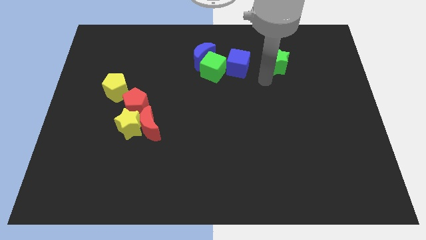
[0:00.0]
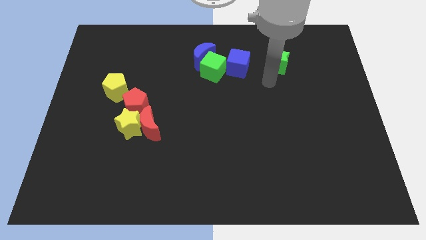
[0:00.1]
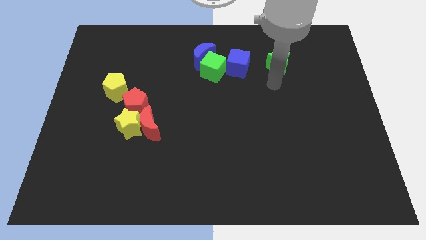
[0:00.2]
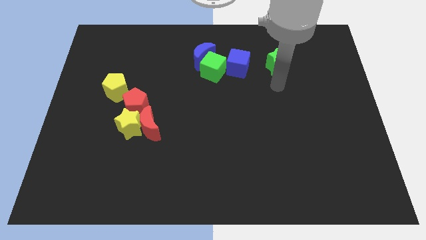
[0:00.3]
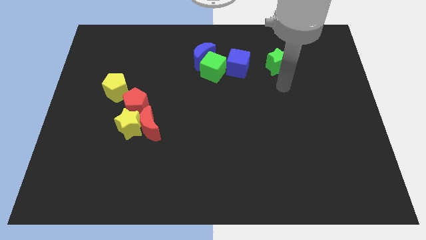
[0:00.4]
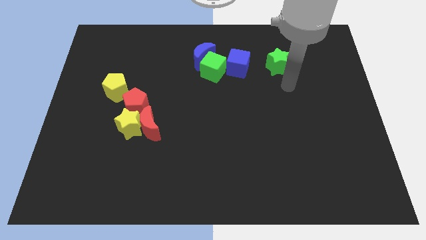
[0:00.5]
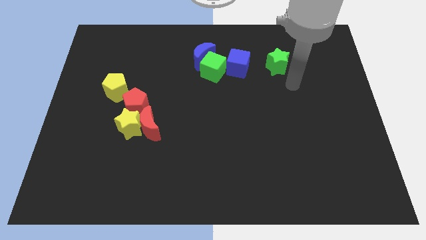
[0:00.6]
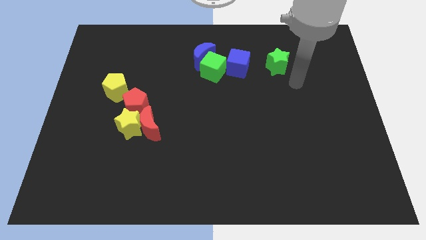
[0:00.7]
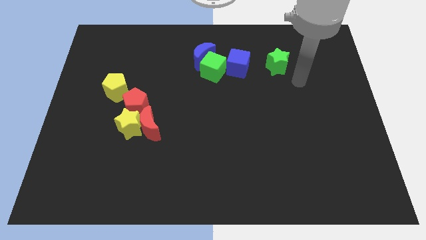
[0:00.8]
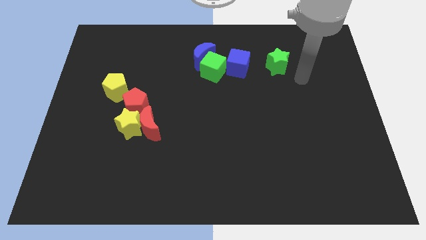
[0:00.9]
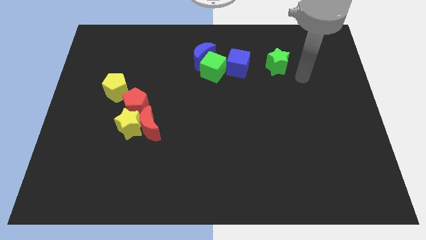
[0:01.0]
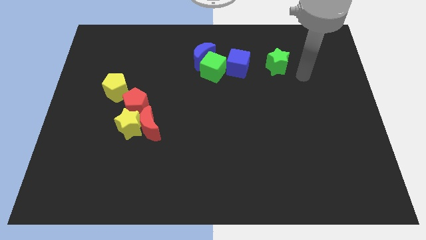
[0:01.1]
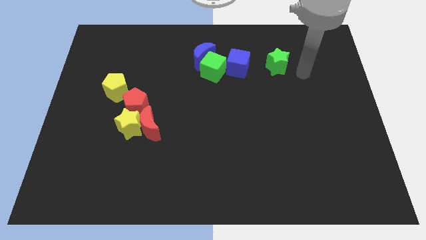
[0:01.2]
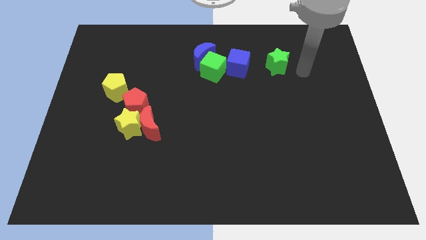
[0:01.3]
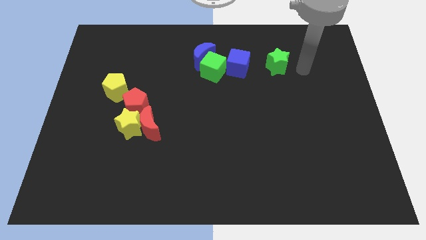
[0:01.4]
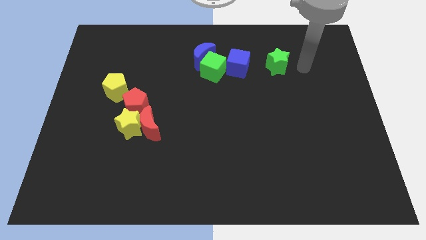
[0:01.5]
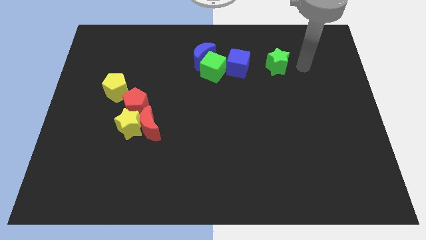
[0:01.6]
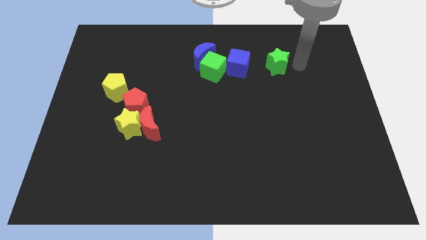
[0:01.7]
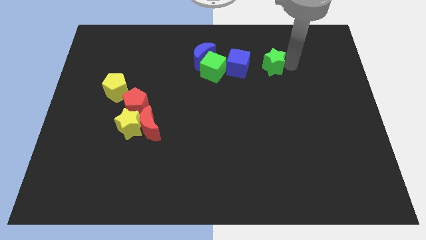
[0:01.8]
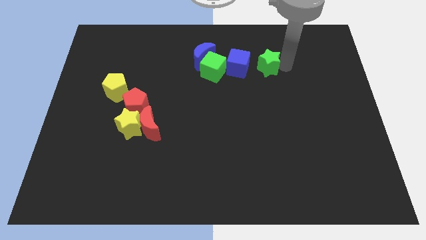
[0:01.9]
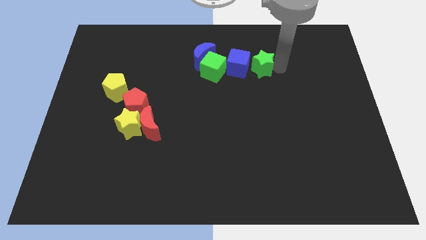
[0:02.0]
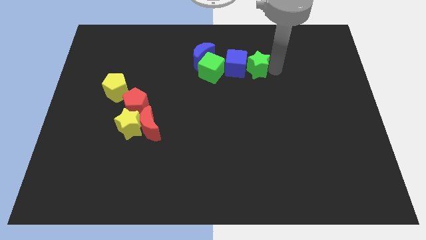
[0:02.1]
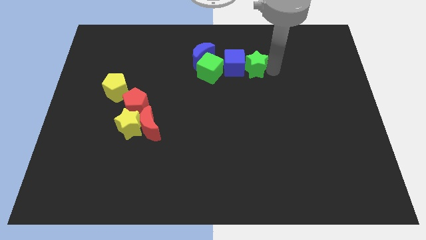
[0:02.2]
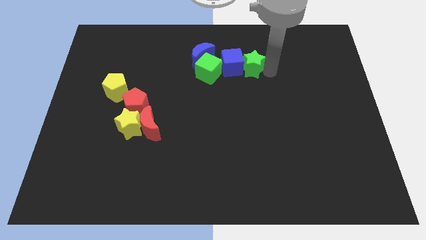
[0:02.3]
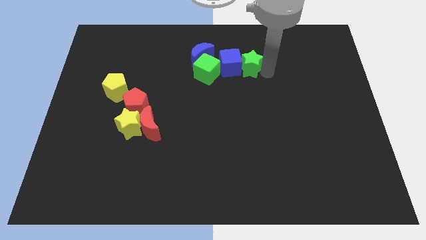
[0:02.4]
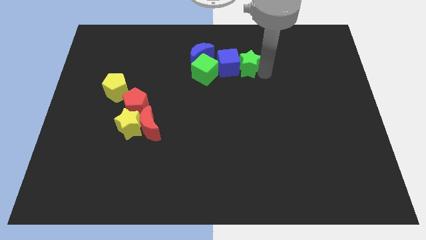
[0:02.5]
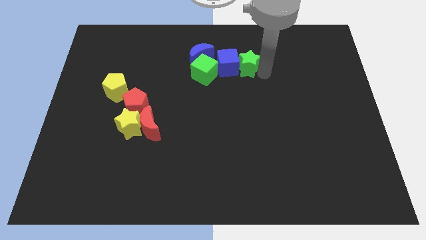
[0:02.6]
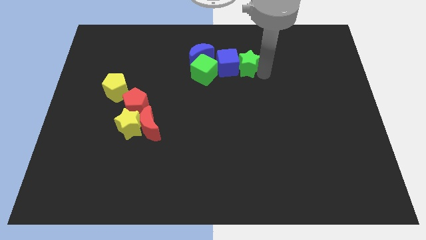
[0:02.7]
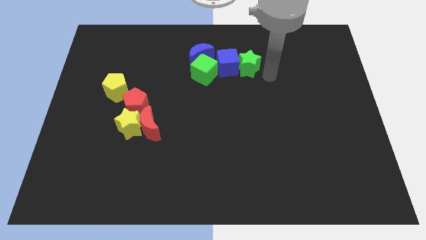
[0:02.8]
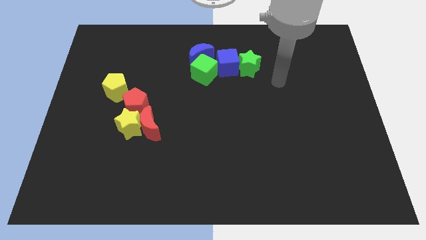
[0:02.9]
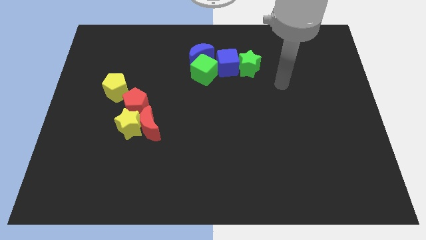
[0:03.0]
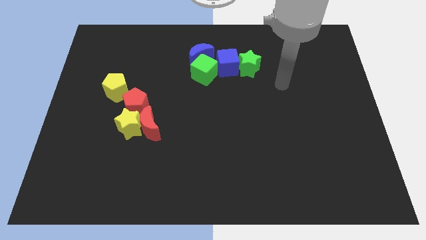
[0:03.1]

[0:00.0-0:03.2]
push the green star into the blue cube

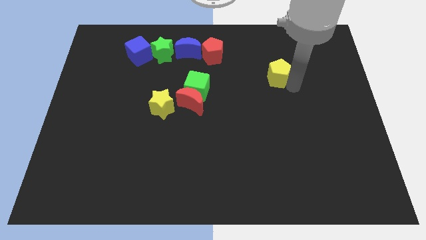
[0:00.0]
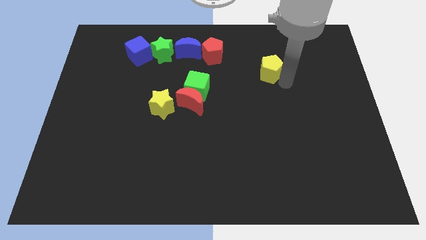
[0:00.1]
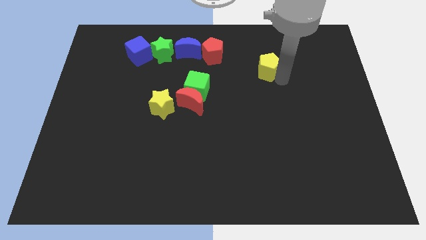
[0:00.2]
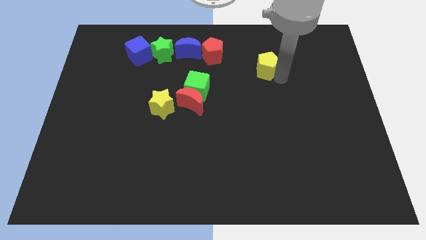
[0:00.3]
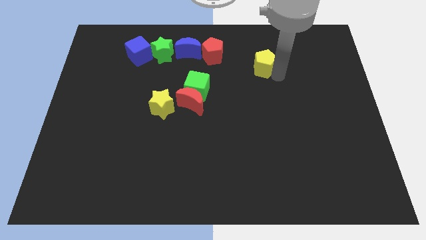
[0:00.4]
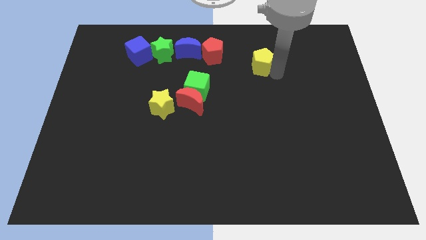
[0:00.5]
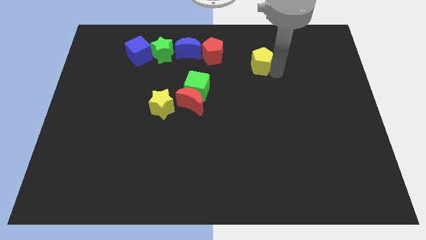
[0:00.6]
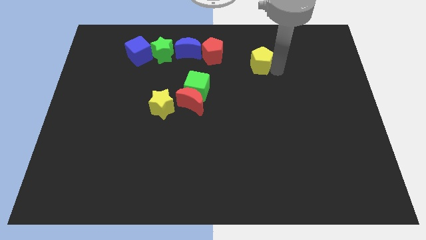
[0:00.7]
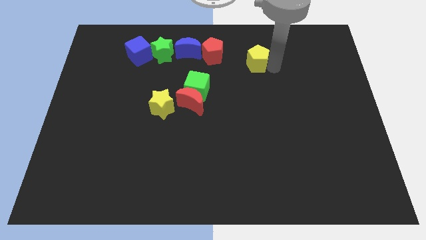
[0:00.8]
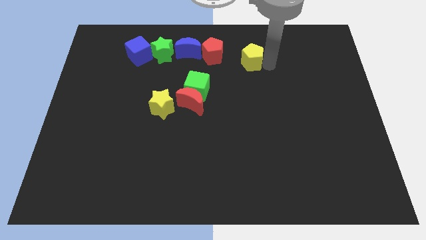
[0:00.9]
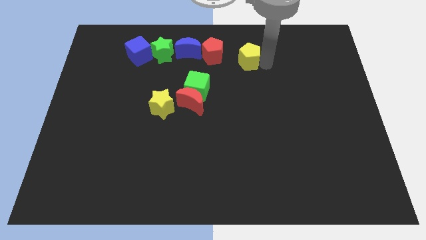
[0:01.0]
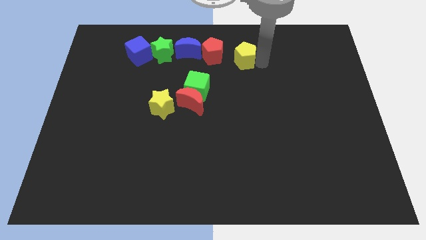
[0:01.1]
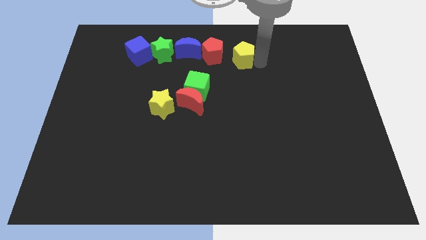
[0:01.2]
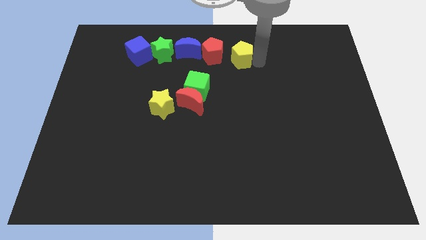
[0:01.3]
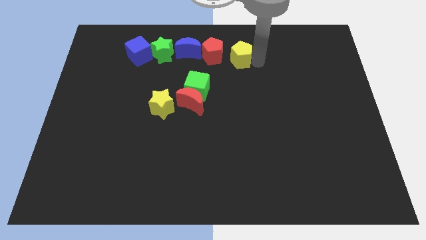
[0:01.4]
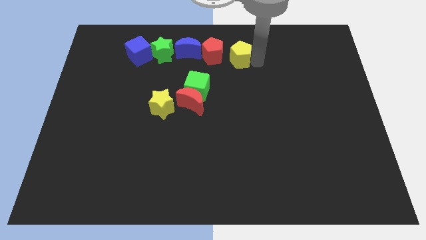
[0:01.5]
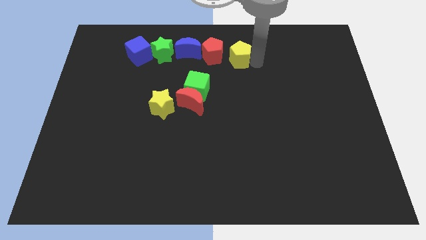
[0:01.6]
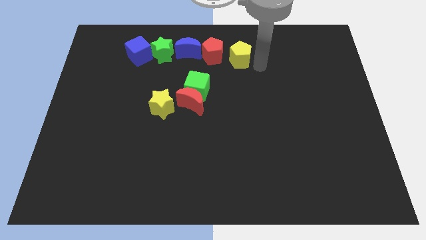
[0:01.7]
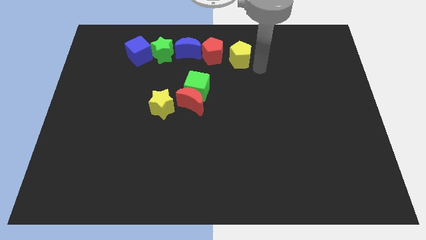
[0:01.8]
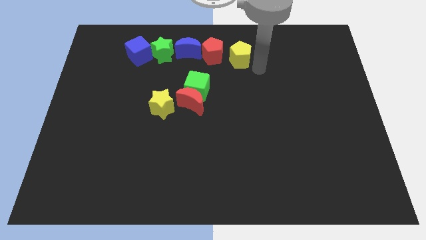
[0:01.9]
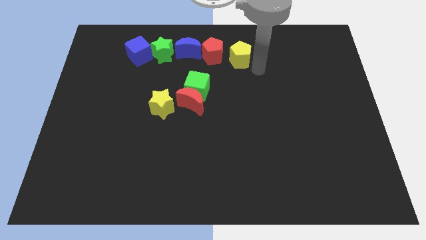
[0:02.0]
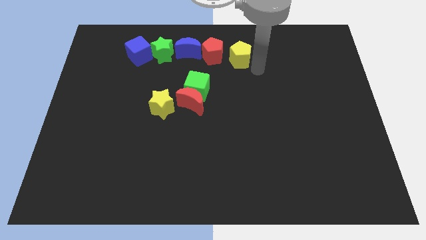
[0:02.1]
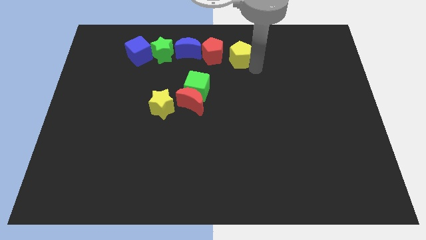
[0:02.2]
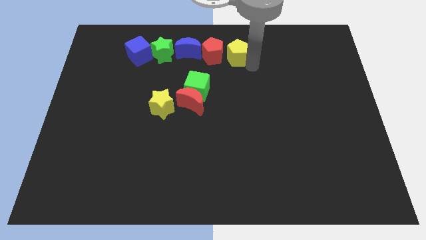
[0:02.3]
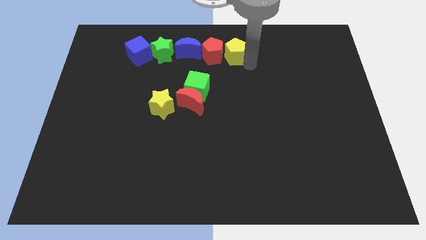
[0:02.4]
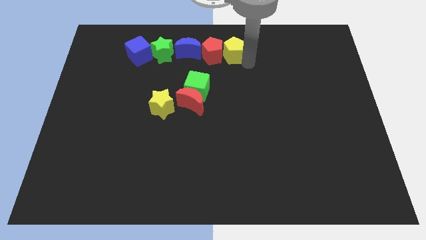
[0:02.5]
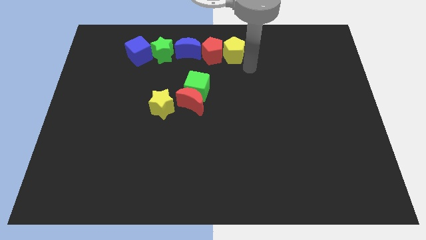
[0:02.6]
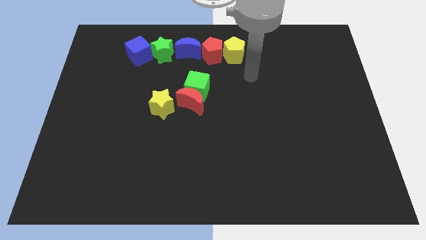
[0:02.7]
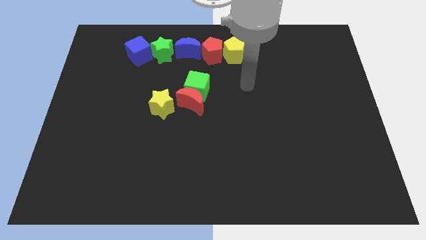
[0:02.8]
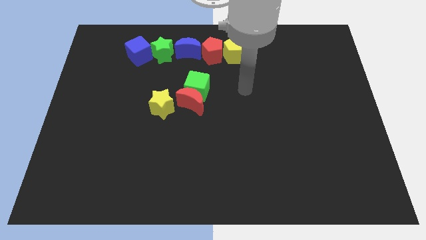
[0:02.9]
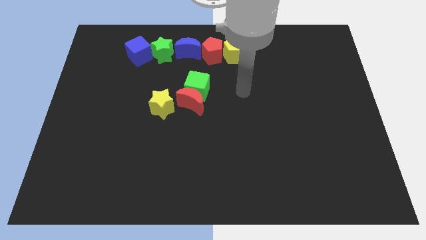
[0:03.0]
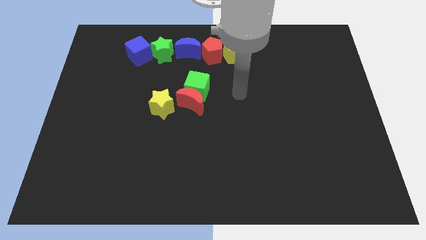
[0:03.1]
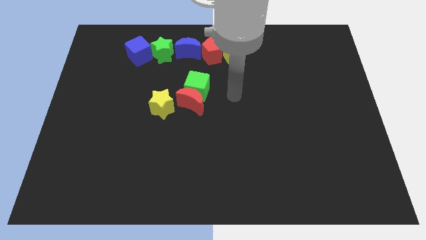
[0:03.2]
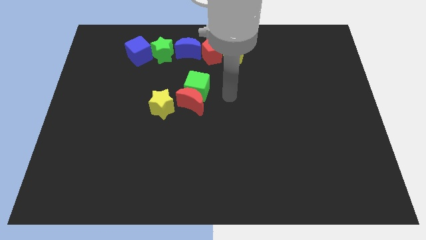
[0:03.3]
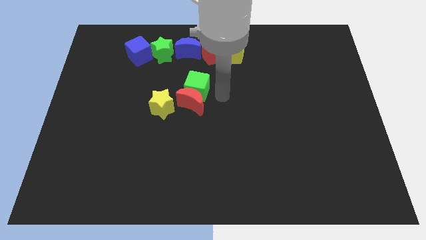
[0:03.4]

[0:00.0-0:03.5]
place yellow pentagon to the right of the red pentagon

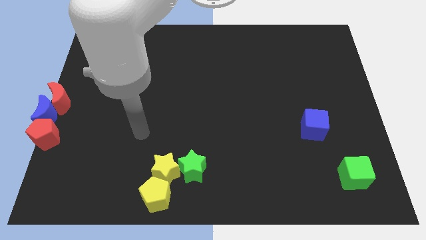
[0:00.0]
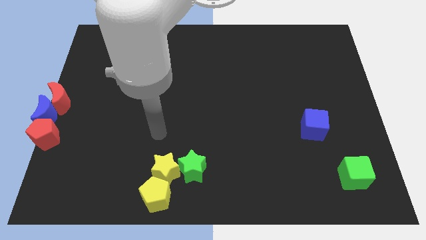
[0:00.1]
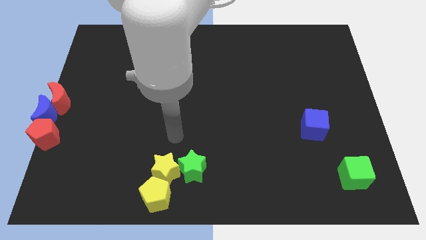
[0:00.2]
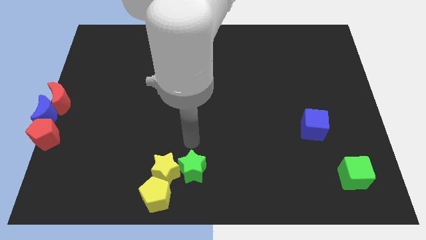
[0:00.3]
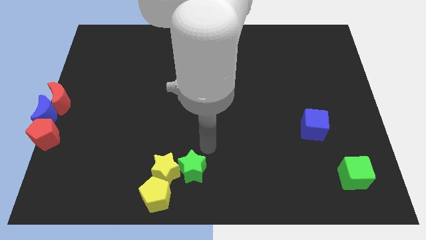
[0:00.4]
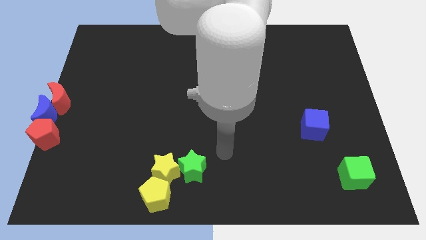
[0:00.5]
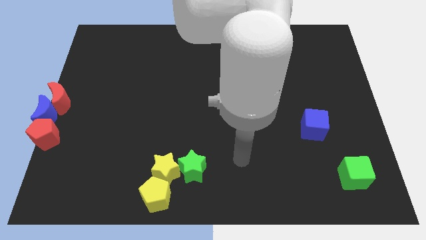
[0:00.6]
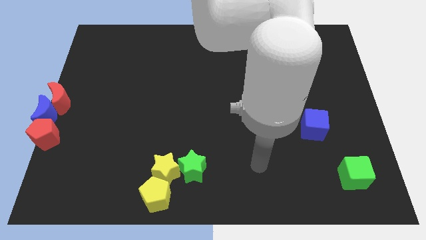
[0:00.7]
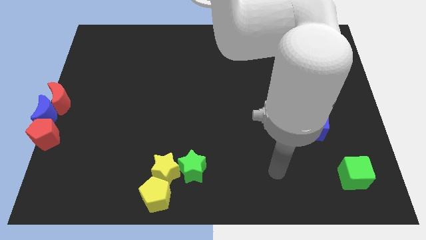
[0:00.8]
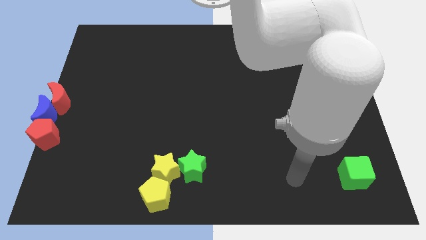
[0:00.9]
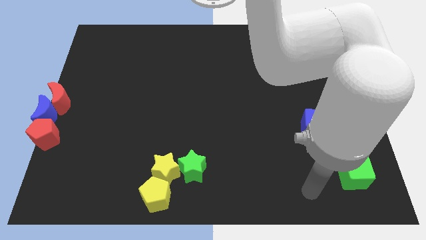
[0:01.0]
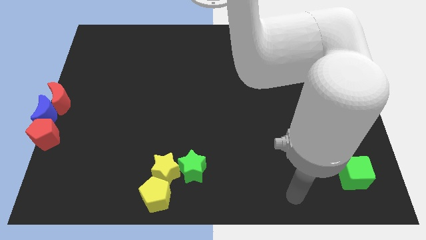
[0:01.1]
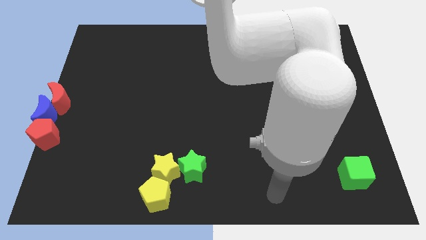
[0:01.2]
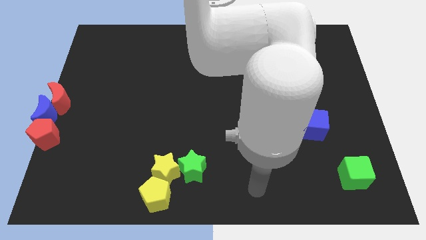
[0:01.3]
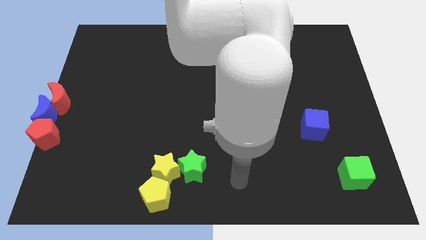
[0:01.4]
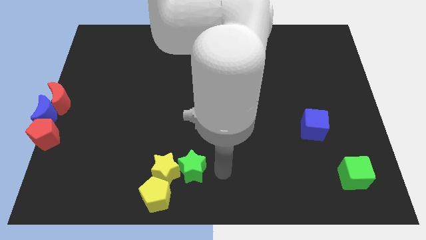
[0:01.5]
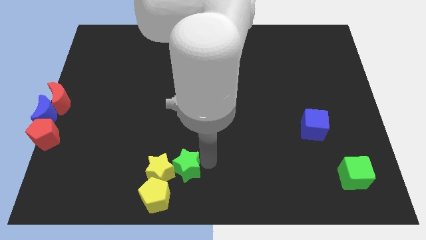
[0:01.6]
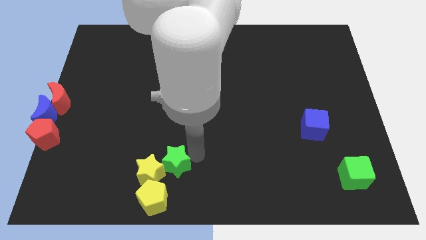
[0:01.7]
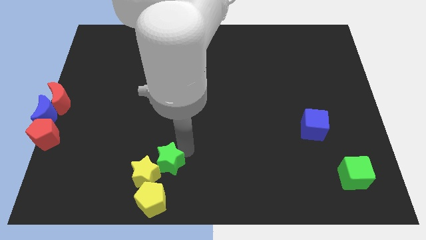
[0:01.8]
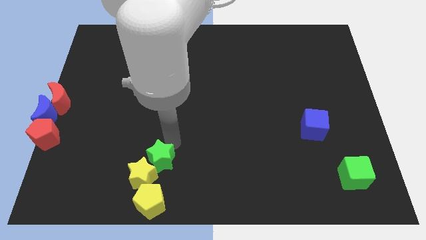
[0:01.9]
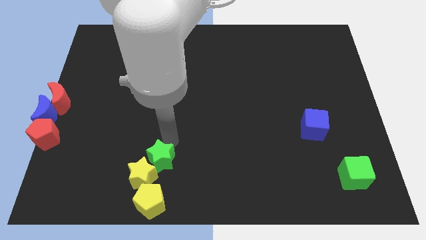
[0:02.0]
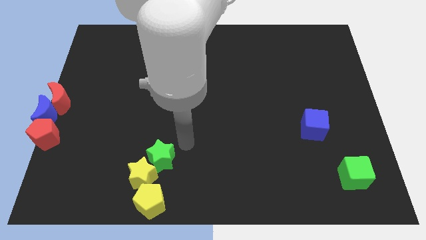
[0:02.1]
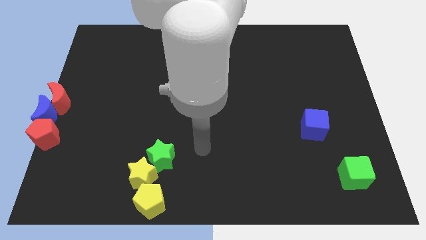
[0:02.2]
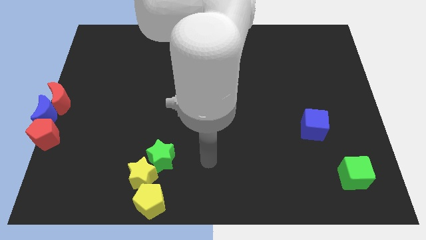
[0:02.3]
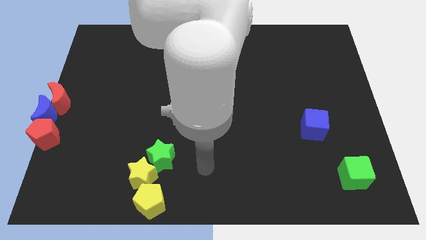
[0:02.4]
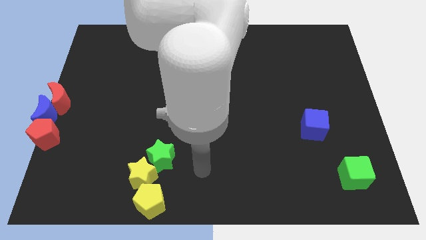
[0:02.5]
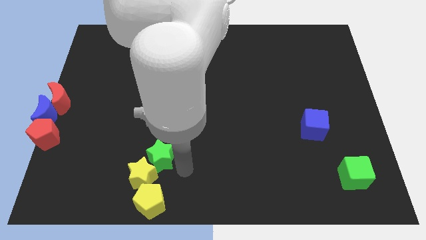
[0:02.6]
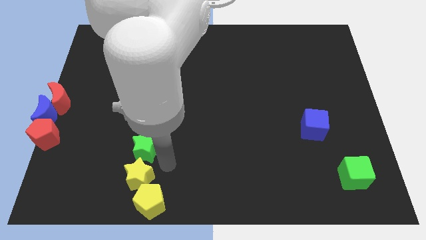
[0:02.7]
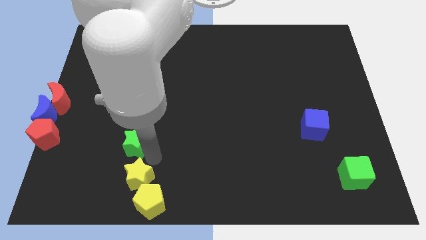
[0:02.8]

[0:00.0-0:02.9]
drag green star to the top of yellow star
